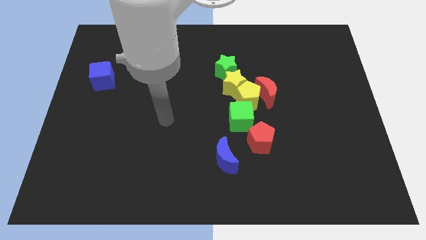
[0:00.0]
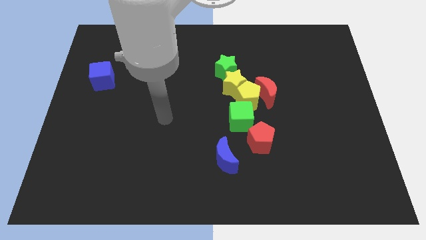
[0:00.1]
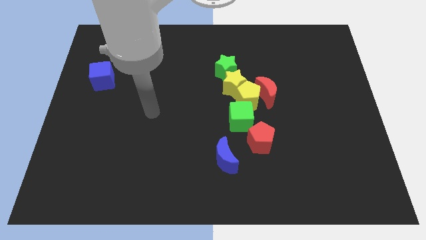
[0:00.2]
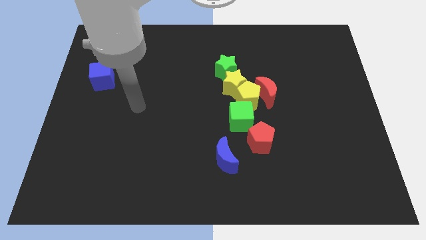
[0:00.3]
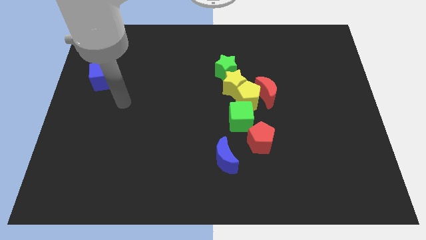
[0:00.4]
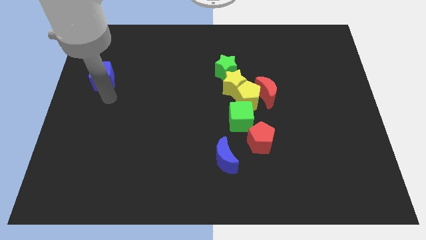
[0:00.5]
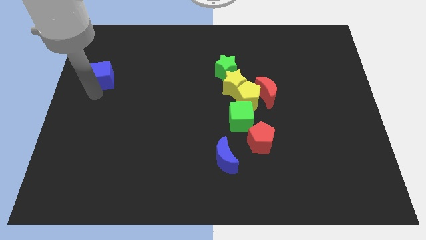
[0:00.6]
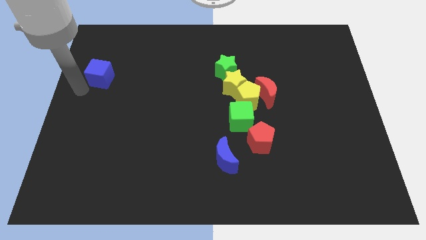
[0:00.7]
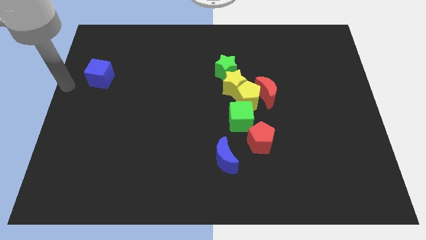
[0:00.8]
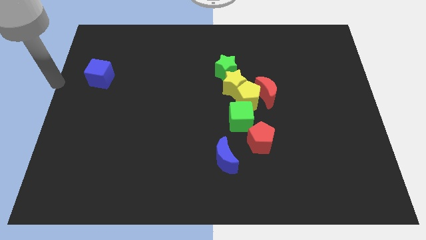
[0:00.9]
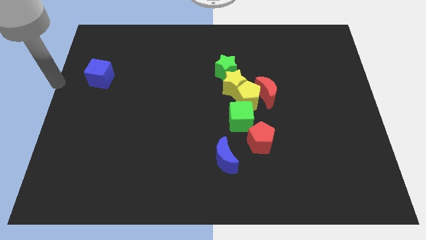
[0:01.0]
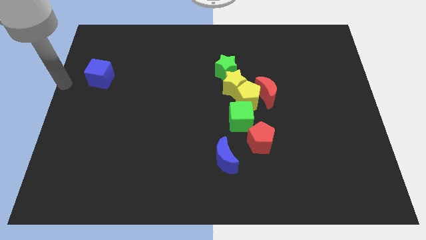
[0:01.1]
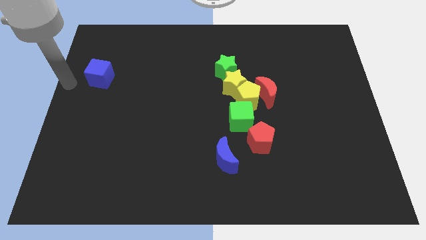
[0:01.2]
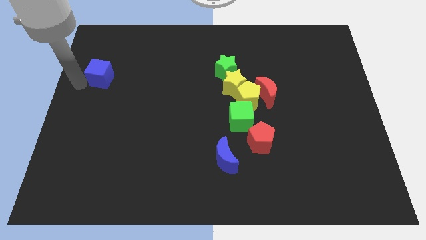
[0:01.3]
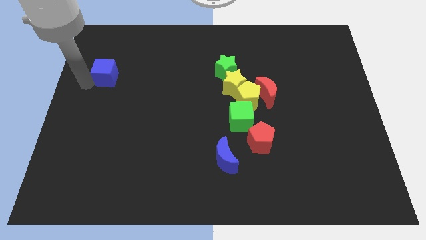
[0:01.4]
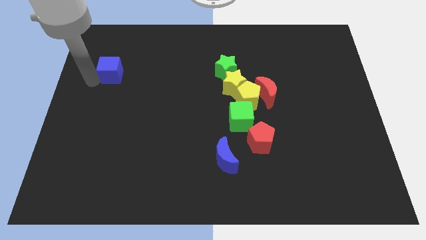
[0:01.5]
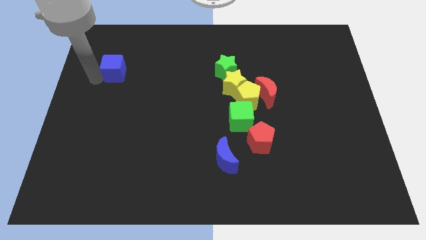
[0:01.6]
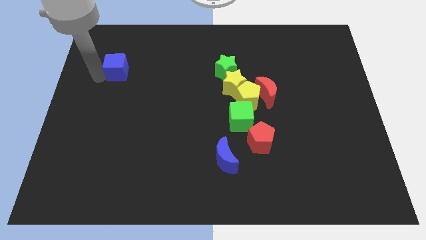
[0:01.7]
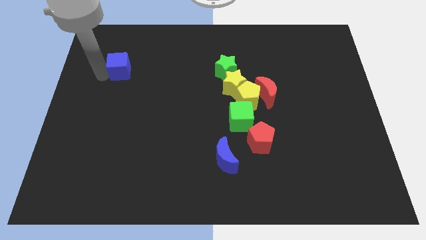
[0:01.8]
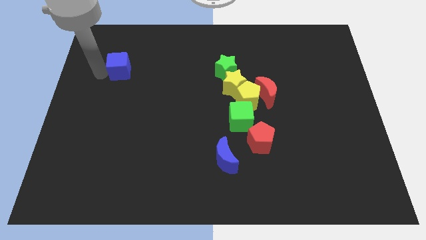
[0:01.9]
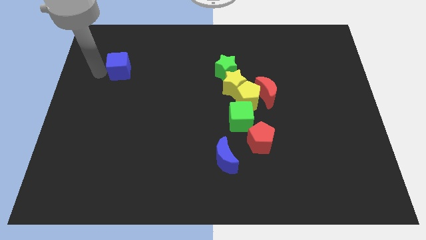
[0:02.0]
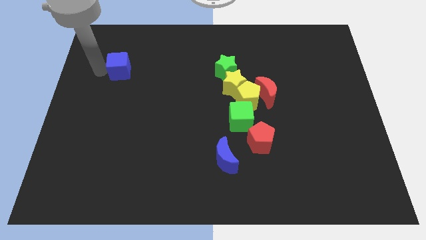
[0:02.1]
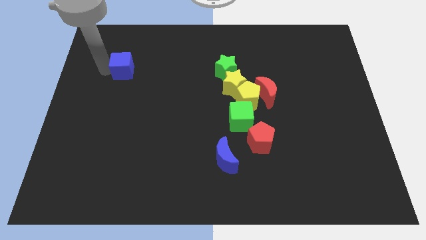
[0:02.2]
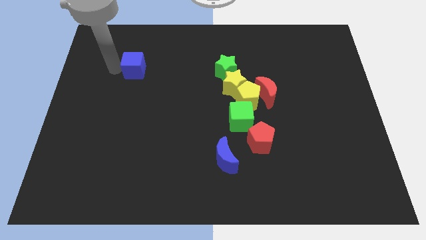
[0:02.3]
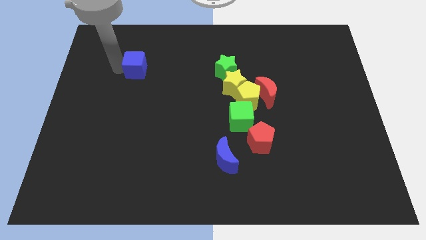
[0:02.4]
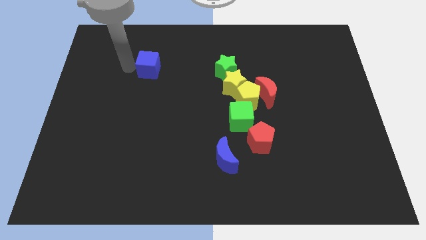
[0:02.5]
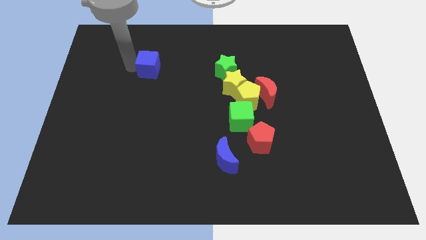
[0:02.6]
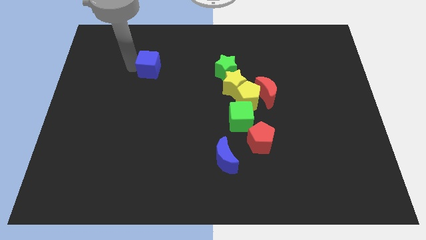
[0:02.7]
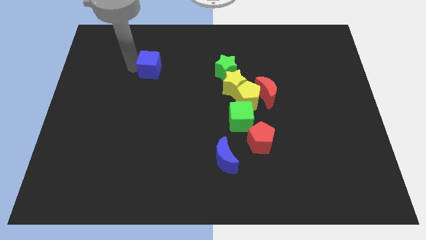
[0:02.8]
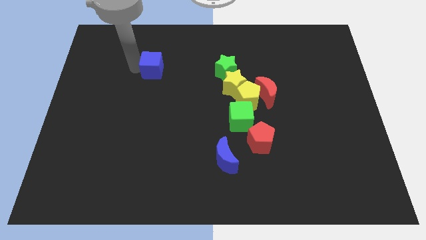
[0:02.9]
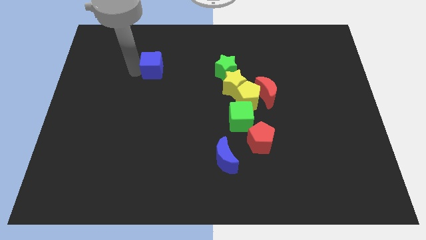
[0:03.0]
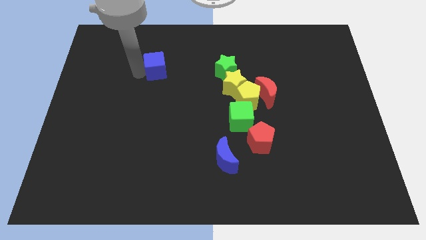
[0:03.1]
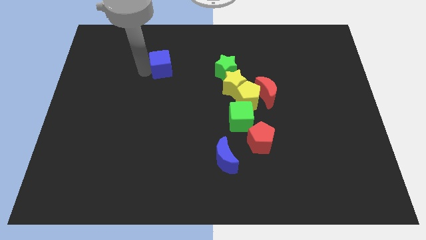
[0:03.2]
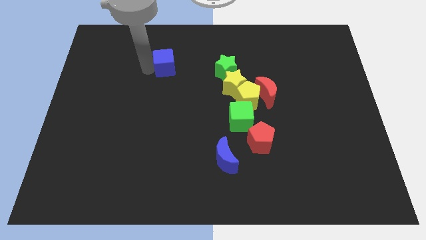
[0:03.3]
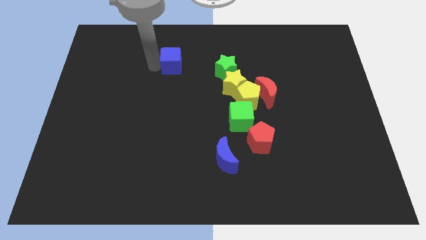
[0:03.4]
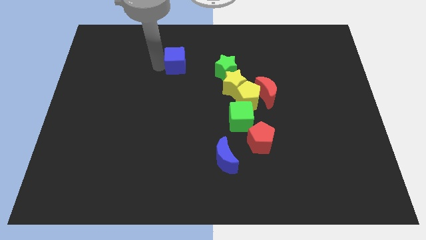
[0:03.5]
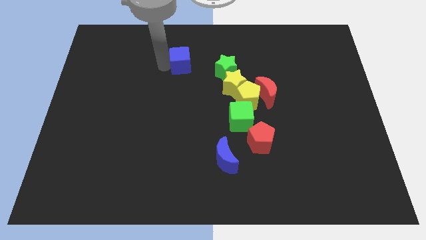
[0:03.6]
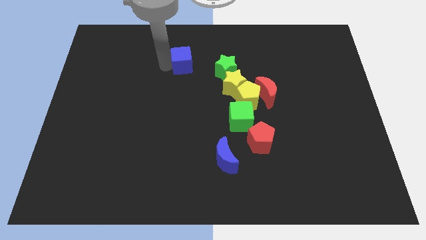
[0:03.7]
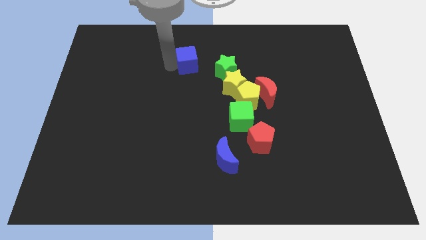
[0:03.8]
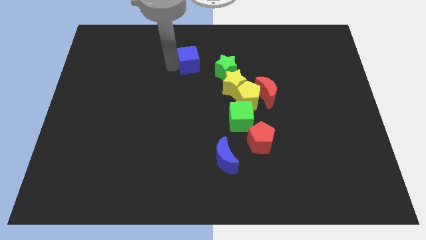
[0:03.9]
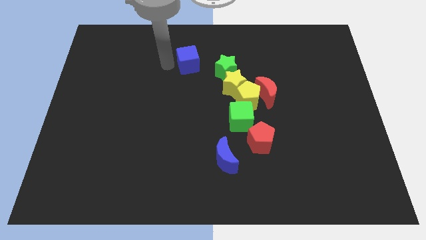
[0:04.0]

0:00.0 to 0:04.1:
move the blue cube to the top center of the board

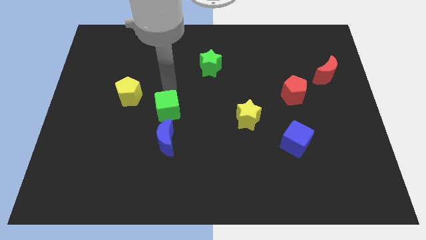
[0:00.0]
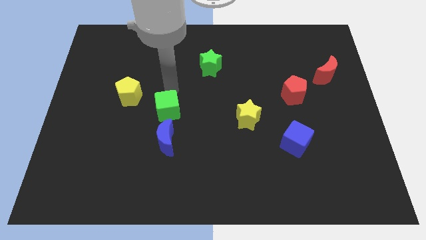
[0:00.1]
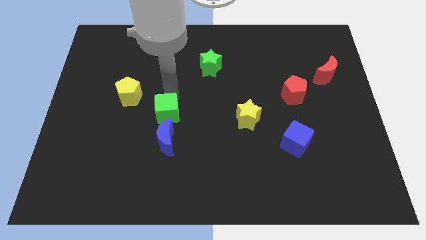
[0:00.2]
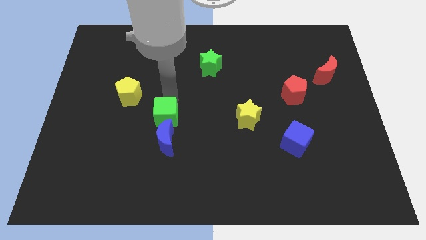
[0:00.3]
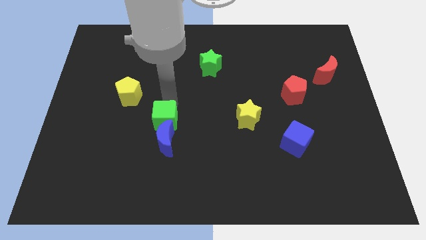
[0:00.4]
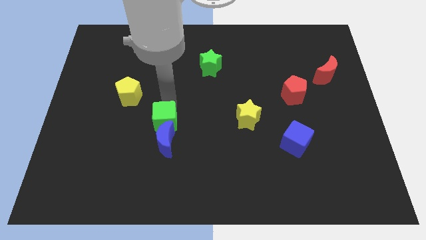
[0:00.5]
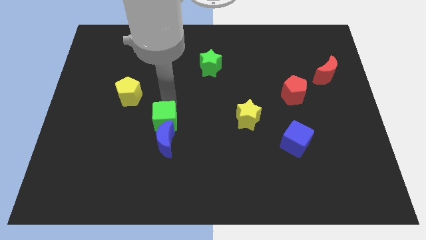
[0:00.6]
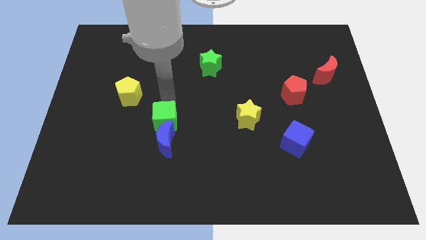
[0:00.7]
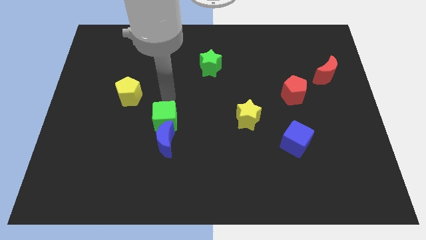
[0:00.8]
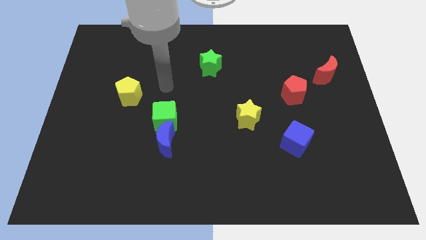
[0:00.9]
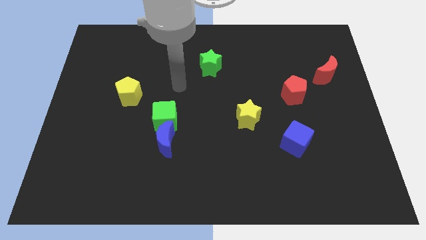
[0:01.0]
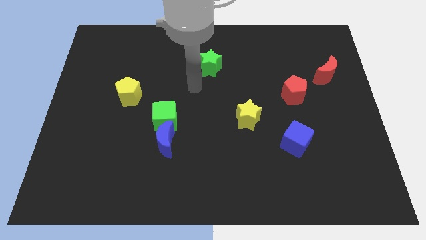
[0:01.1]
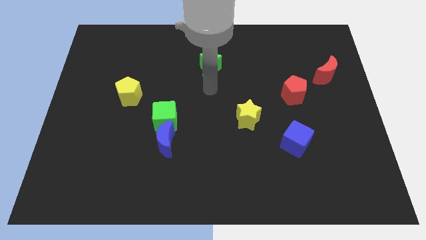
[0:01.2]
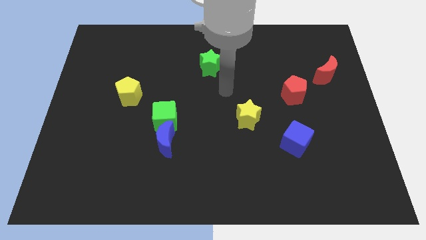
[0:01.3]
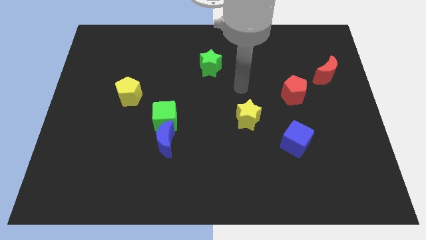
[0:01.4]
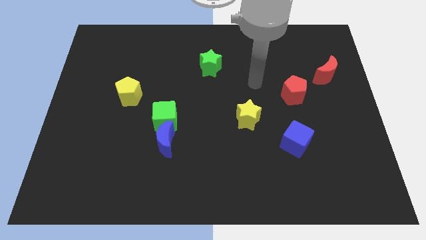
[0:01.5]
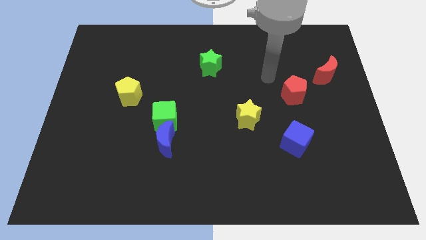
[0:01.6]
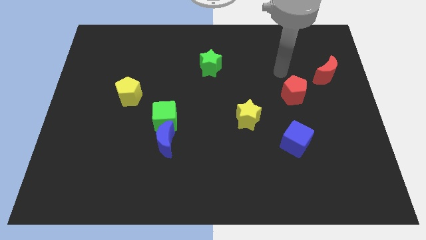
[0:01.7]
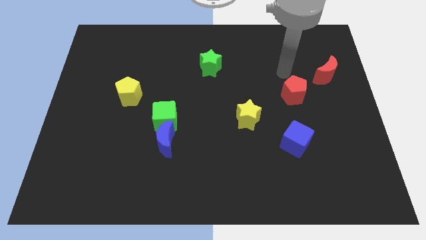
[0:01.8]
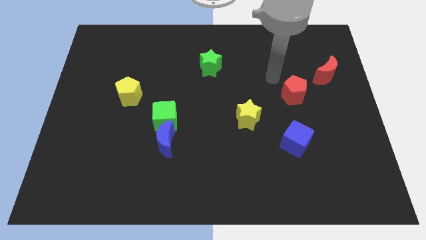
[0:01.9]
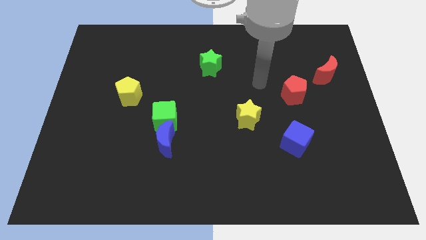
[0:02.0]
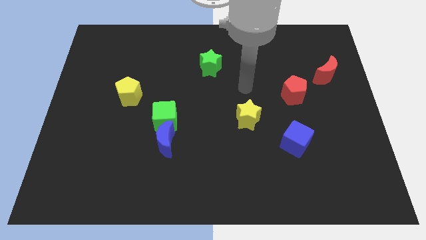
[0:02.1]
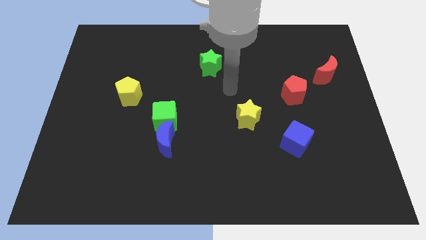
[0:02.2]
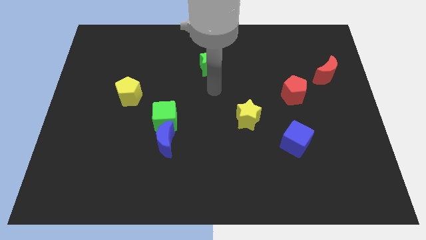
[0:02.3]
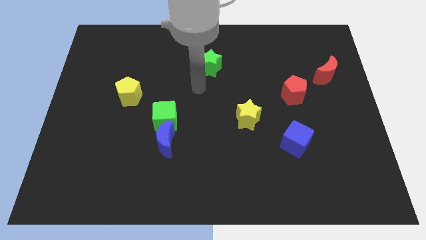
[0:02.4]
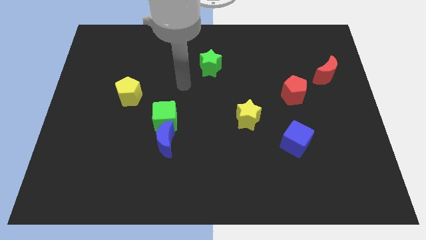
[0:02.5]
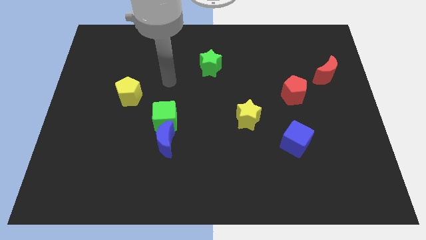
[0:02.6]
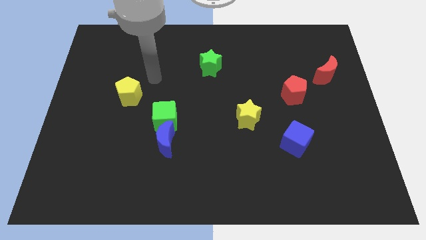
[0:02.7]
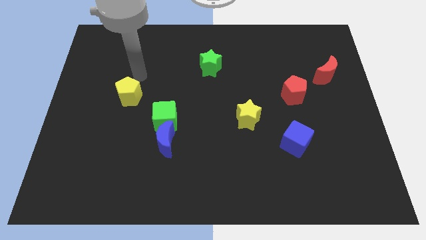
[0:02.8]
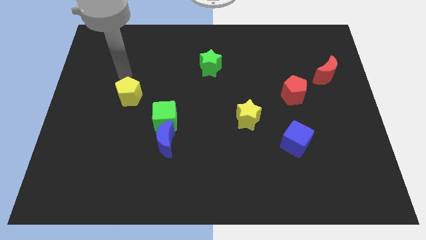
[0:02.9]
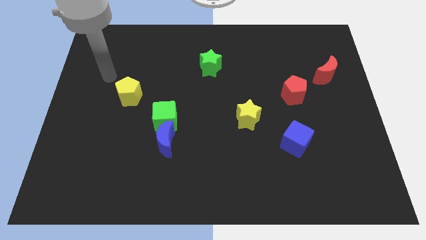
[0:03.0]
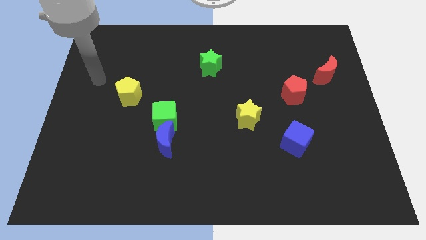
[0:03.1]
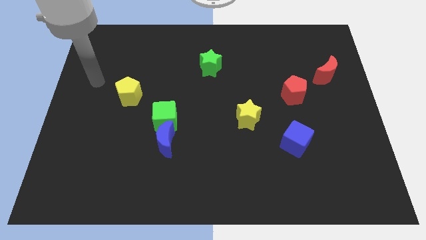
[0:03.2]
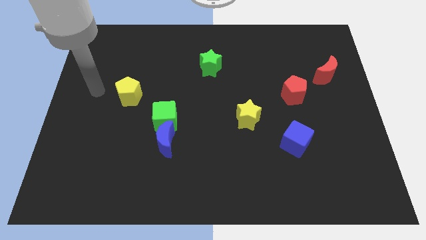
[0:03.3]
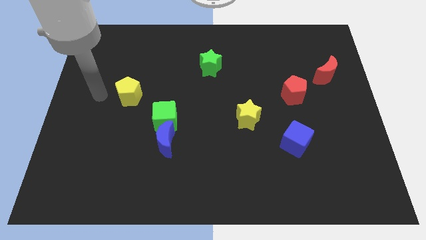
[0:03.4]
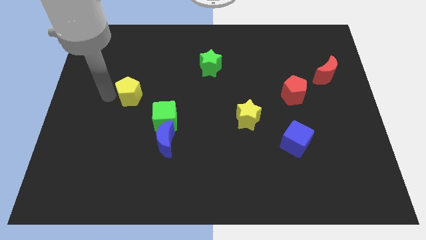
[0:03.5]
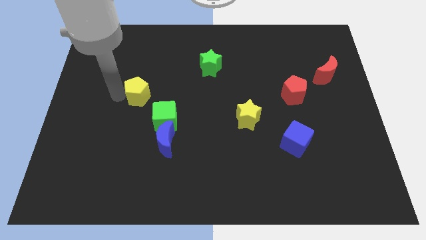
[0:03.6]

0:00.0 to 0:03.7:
move your arm away from the green cube

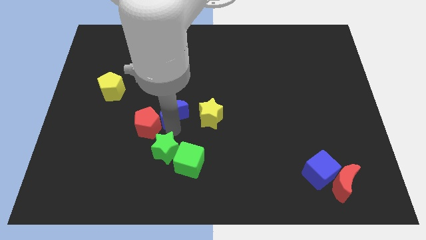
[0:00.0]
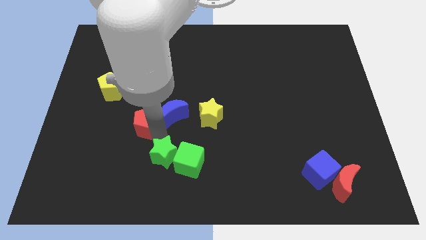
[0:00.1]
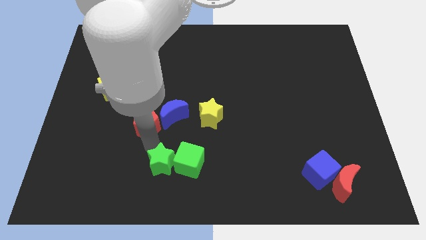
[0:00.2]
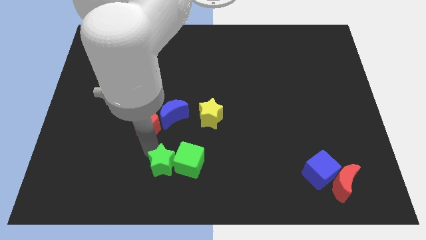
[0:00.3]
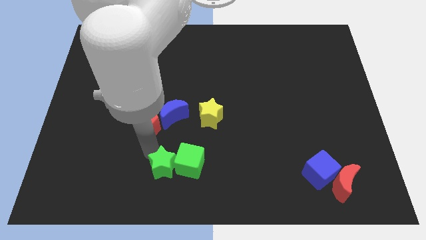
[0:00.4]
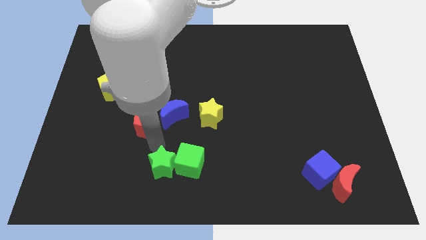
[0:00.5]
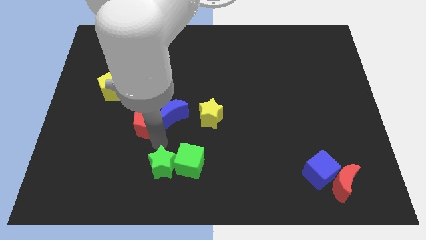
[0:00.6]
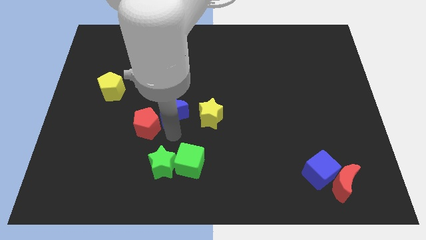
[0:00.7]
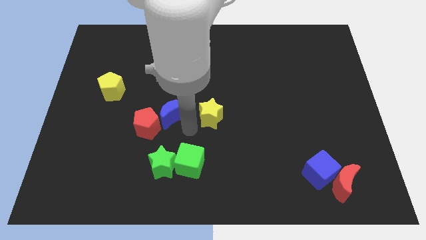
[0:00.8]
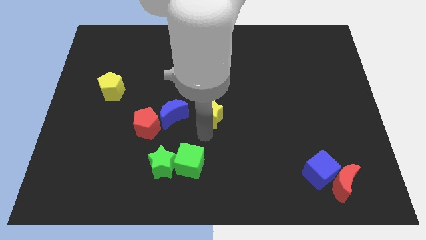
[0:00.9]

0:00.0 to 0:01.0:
move your arm away from green star

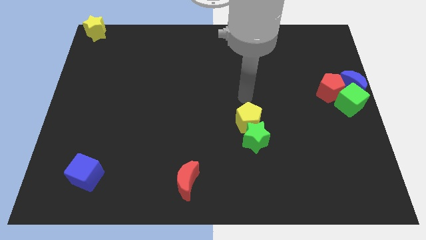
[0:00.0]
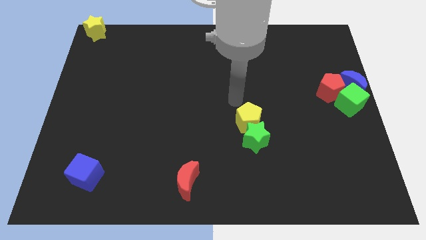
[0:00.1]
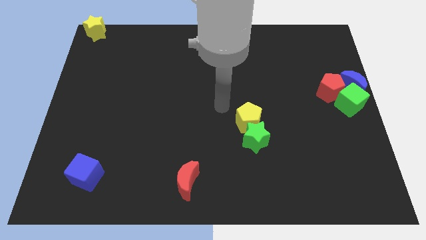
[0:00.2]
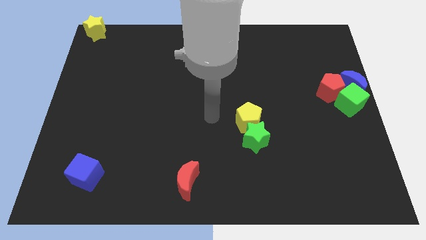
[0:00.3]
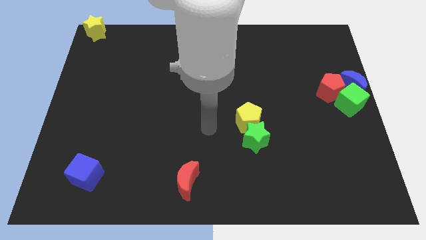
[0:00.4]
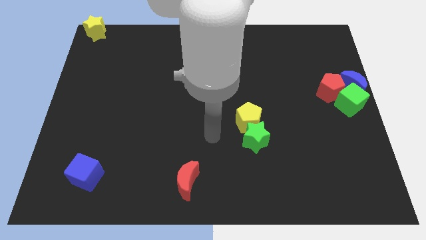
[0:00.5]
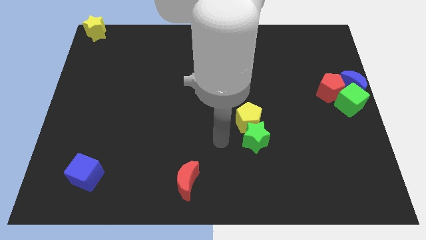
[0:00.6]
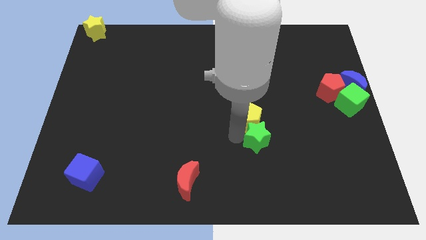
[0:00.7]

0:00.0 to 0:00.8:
move the arm left to the green star
